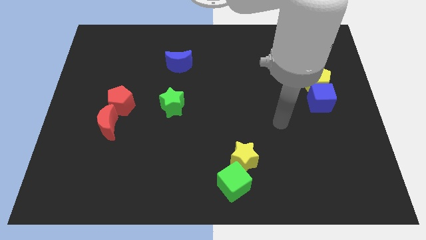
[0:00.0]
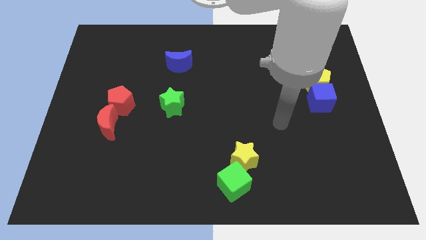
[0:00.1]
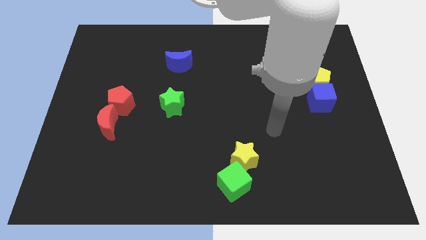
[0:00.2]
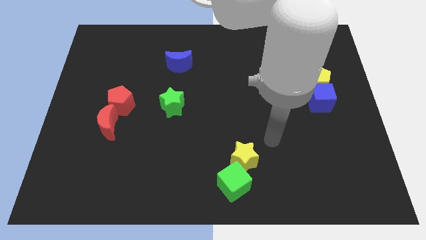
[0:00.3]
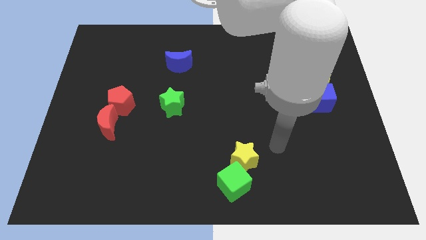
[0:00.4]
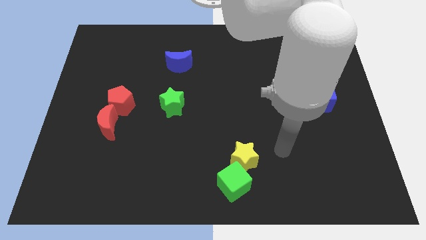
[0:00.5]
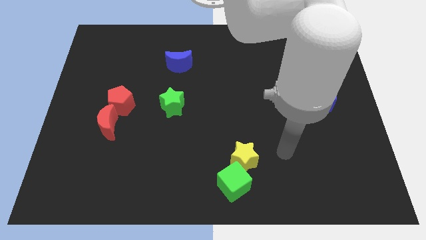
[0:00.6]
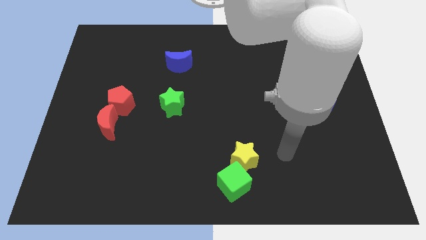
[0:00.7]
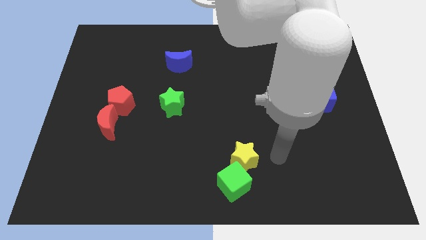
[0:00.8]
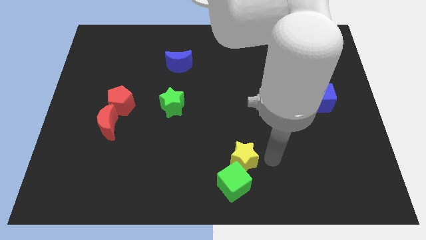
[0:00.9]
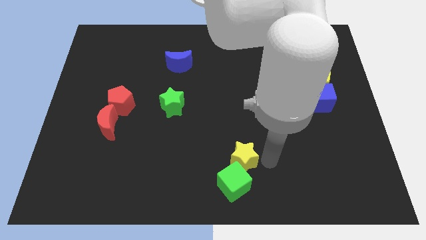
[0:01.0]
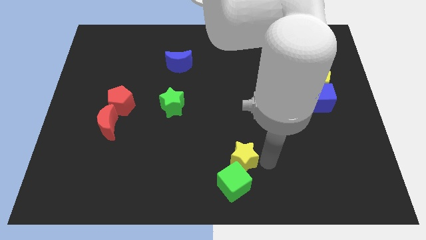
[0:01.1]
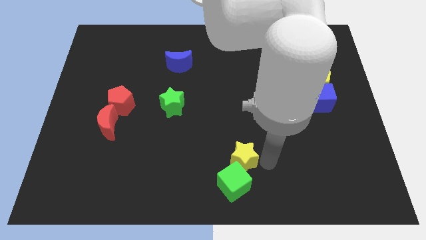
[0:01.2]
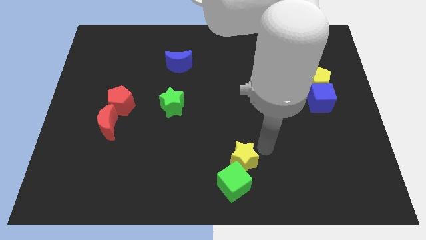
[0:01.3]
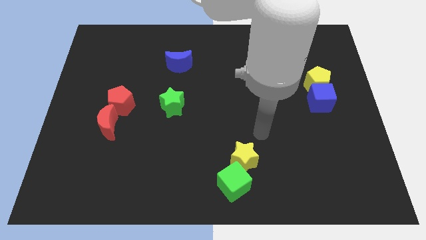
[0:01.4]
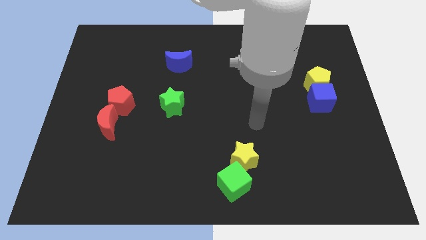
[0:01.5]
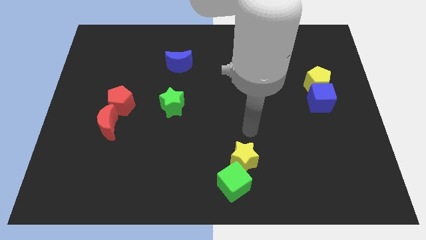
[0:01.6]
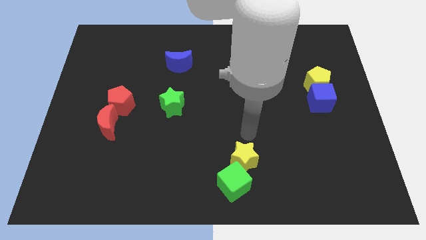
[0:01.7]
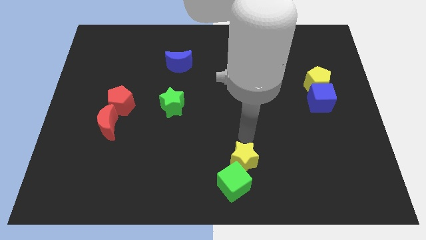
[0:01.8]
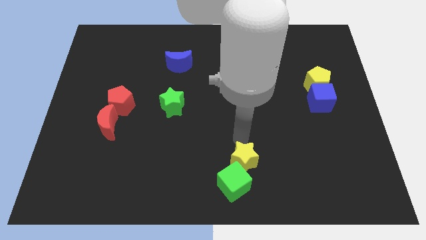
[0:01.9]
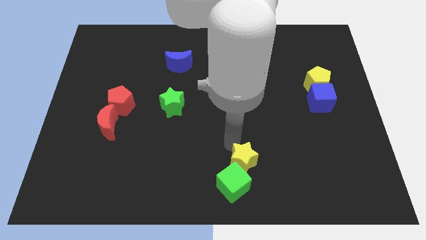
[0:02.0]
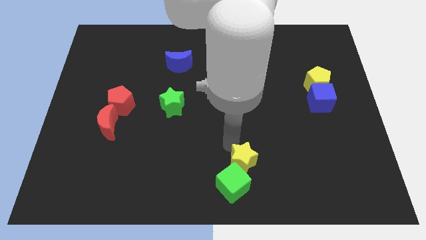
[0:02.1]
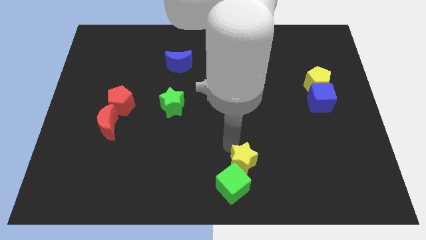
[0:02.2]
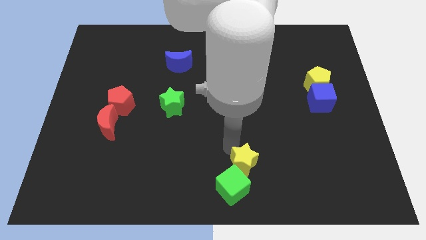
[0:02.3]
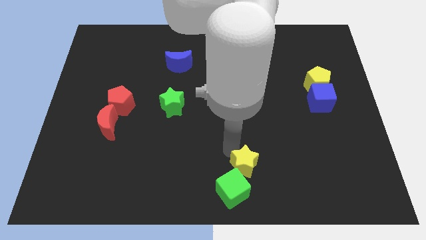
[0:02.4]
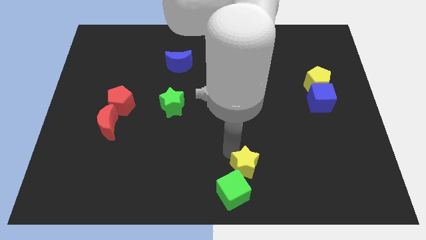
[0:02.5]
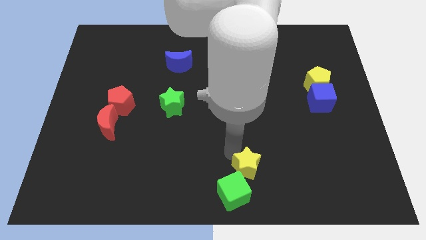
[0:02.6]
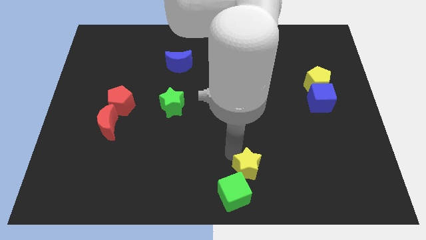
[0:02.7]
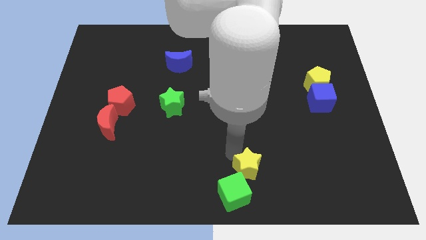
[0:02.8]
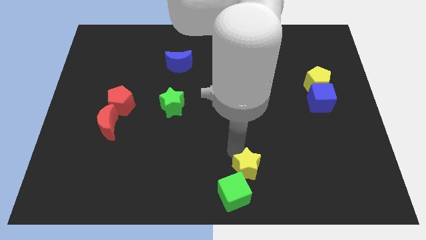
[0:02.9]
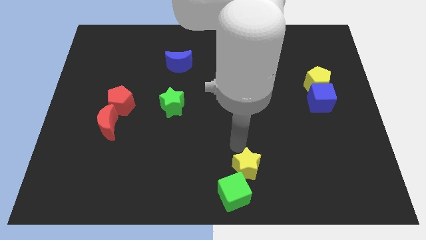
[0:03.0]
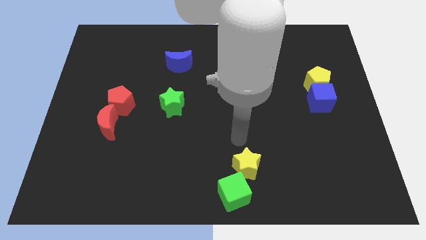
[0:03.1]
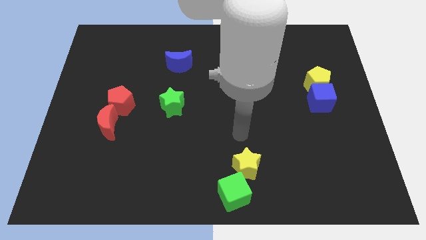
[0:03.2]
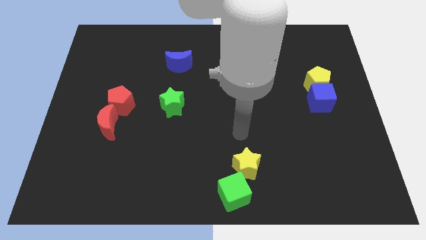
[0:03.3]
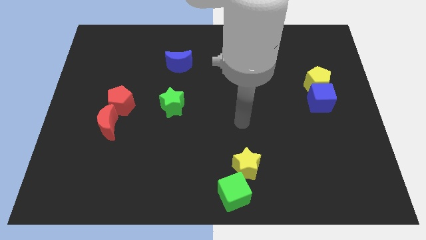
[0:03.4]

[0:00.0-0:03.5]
push the yellow star into the green cube

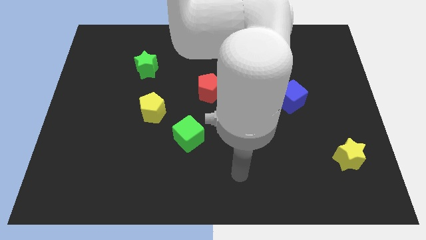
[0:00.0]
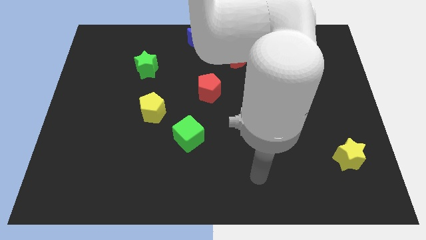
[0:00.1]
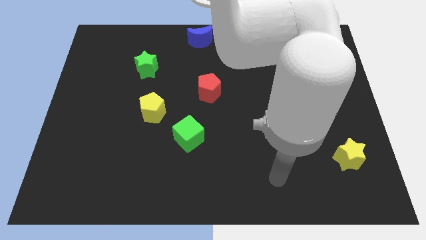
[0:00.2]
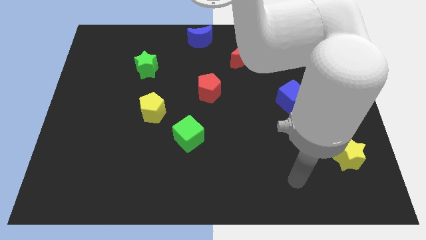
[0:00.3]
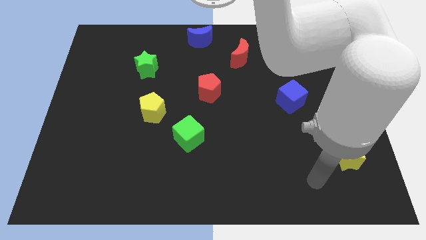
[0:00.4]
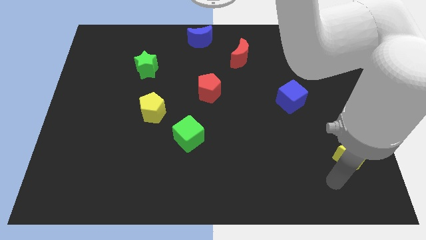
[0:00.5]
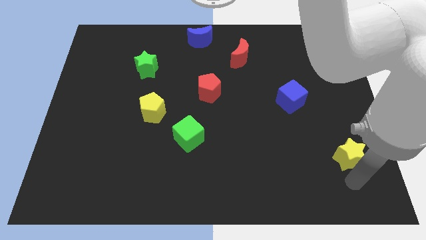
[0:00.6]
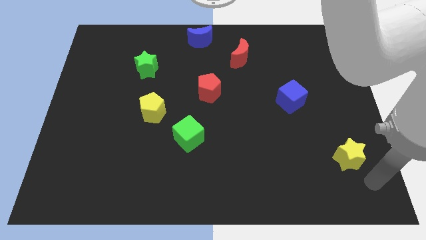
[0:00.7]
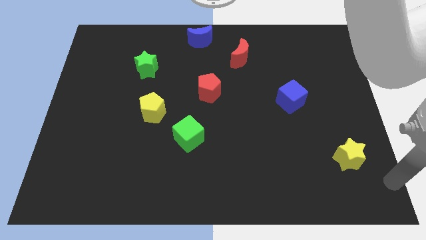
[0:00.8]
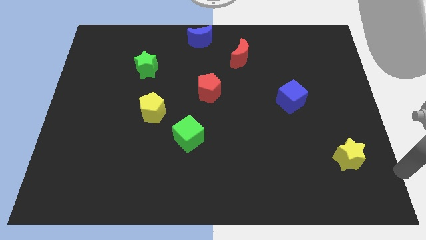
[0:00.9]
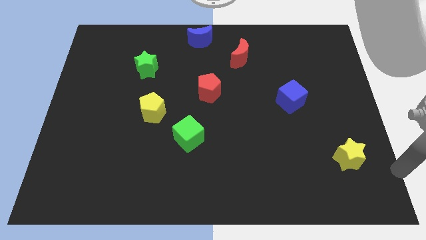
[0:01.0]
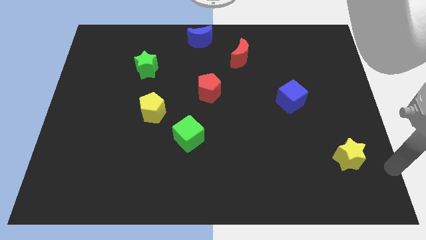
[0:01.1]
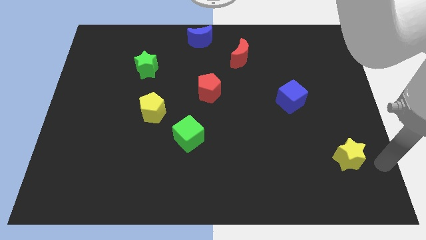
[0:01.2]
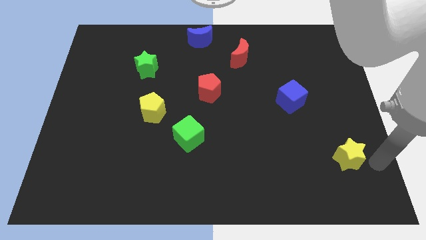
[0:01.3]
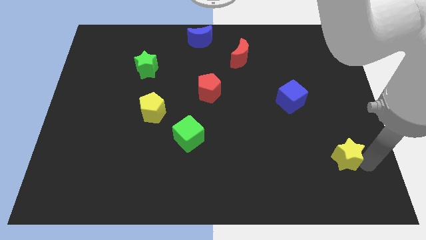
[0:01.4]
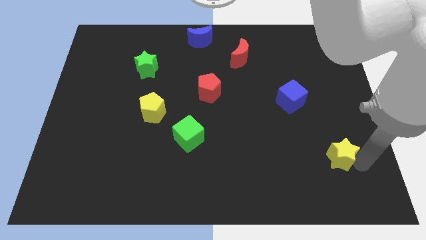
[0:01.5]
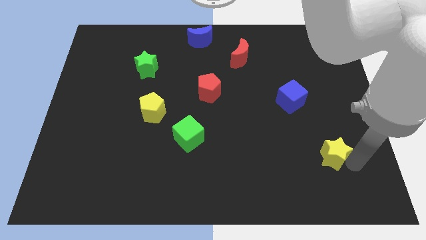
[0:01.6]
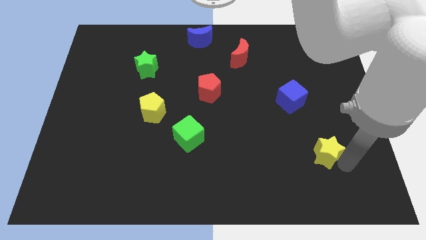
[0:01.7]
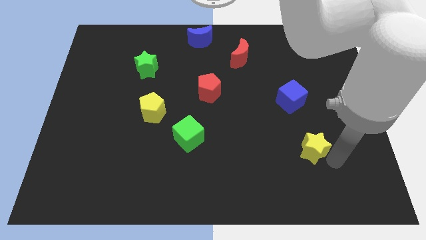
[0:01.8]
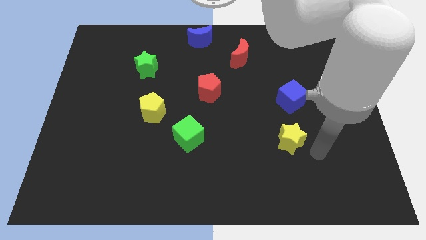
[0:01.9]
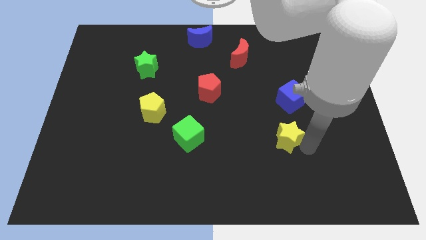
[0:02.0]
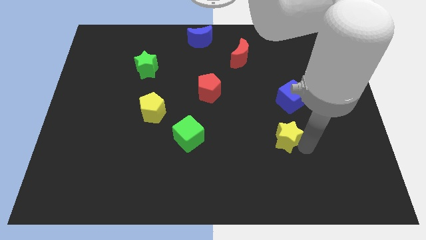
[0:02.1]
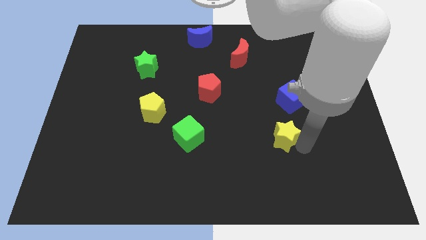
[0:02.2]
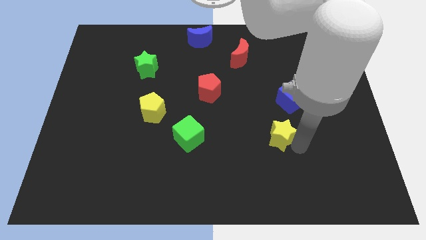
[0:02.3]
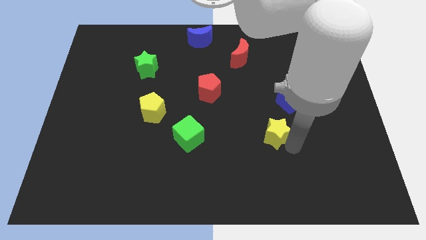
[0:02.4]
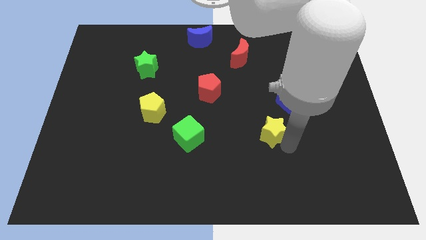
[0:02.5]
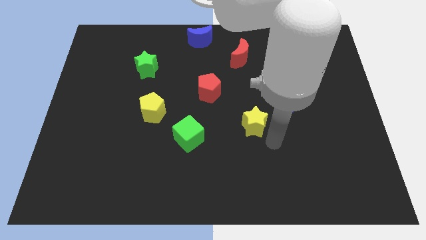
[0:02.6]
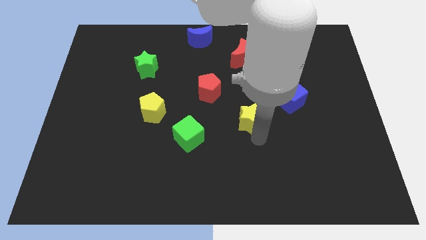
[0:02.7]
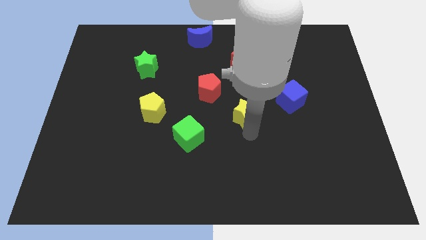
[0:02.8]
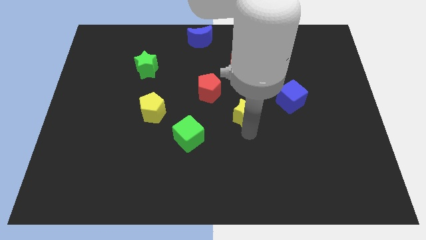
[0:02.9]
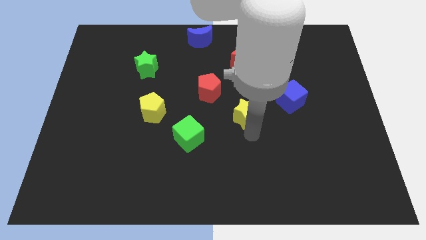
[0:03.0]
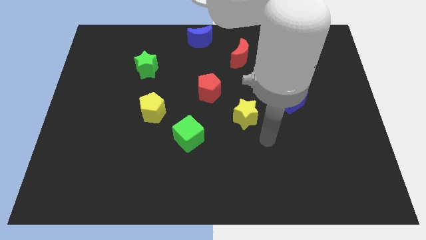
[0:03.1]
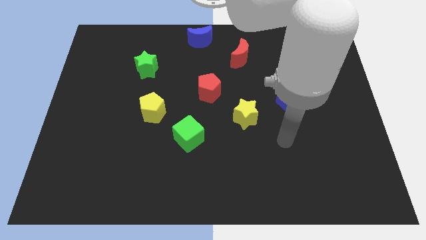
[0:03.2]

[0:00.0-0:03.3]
place the yellow star diagonally in between the green cube and blue cube

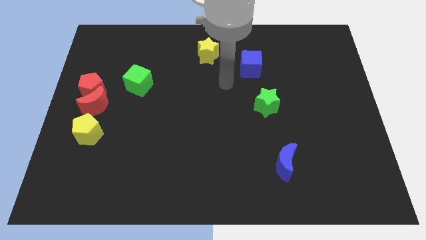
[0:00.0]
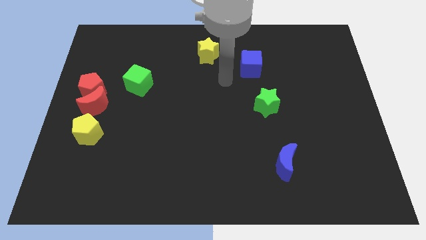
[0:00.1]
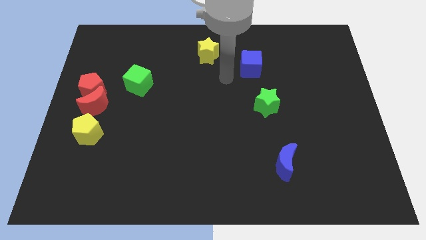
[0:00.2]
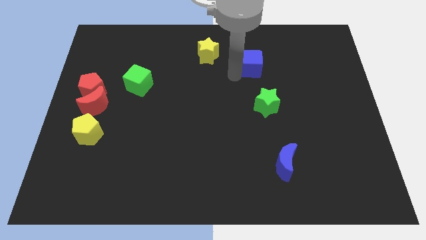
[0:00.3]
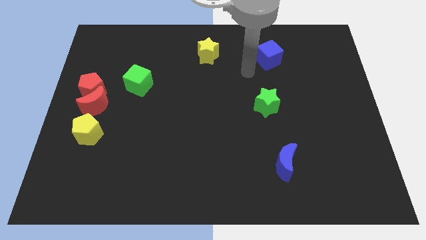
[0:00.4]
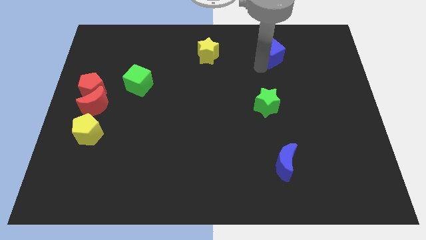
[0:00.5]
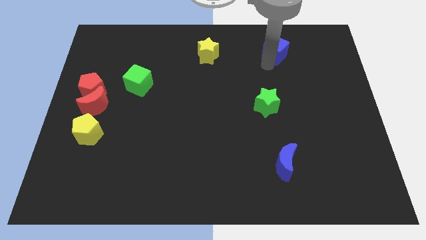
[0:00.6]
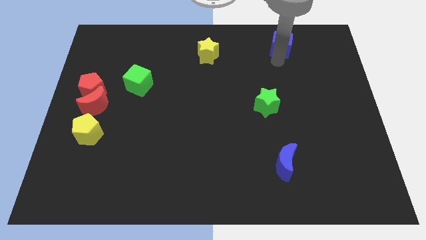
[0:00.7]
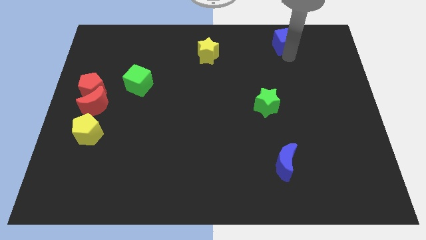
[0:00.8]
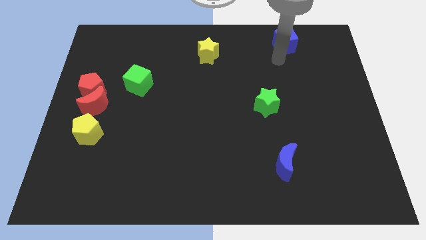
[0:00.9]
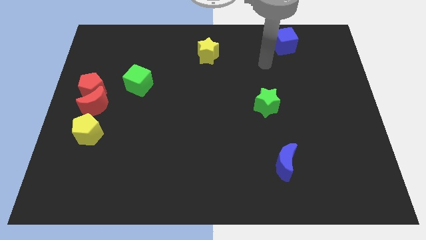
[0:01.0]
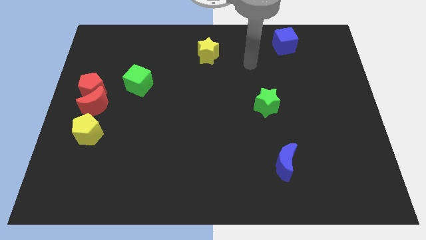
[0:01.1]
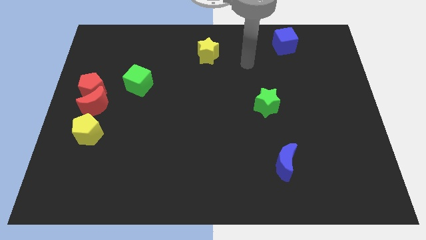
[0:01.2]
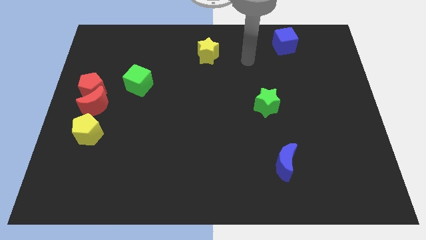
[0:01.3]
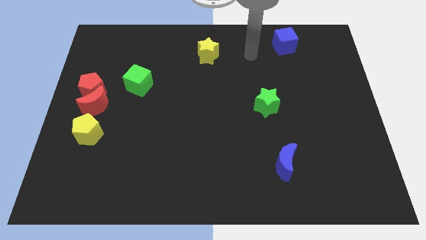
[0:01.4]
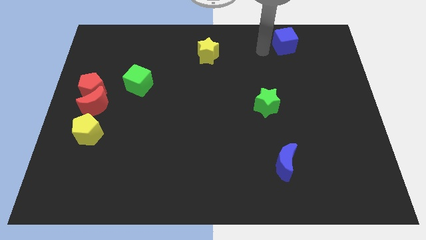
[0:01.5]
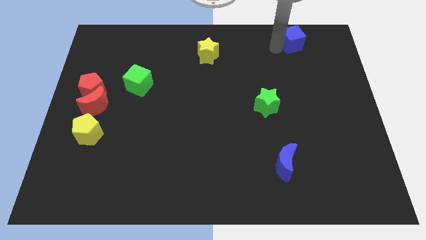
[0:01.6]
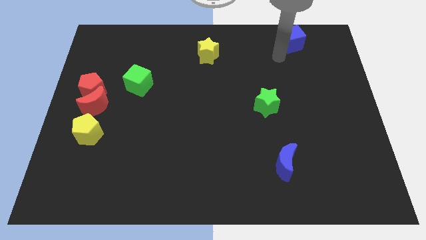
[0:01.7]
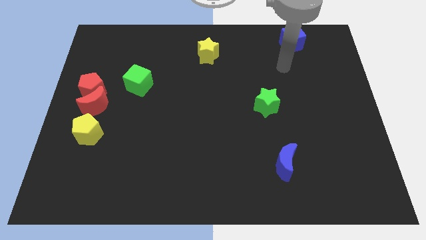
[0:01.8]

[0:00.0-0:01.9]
move the blue cube towards the top right corner of board

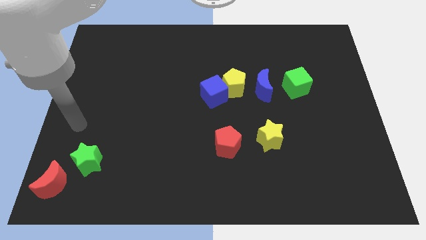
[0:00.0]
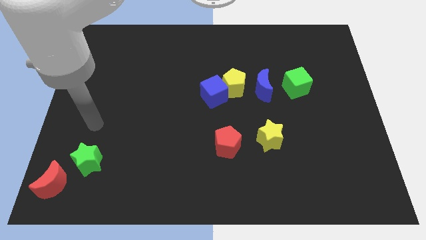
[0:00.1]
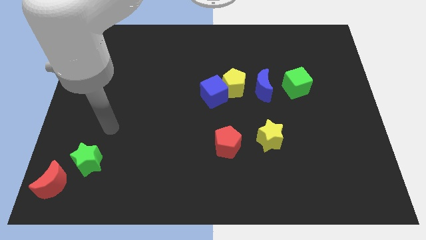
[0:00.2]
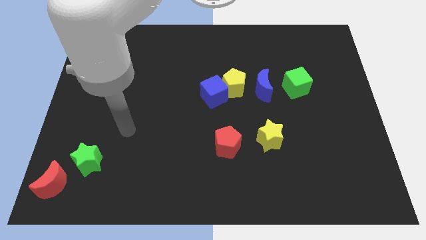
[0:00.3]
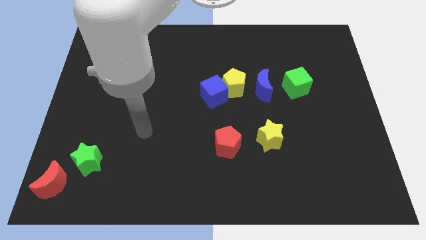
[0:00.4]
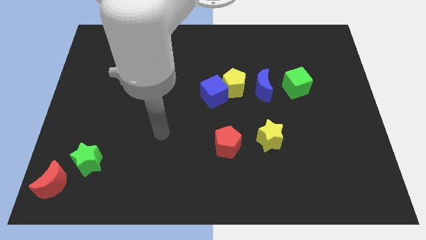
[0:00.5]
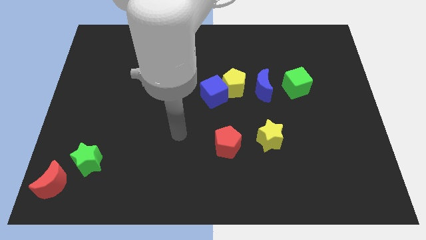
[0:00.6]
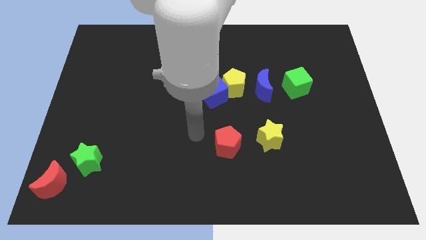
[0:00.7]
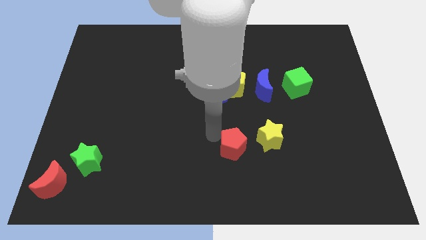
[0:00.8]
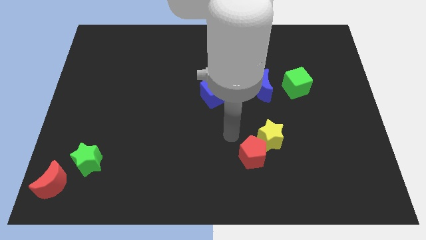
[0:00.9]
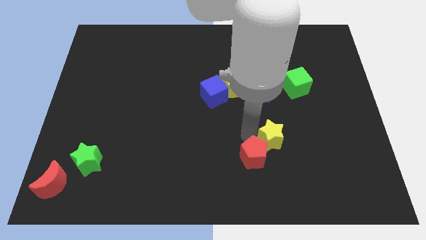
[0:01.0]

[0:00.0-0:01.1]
move red pentagon into yellow star
